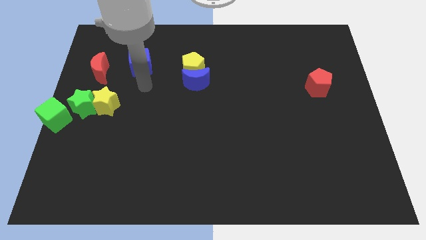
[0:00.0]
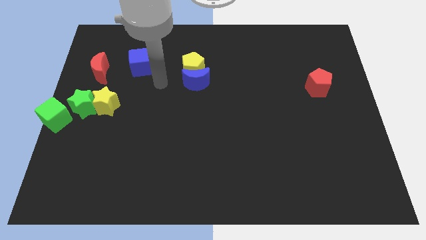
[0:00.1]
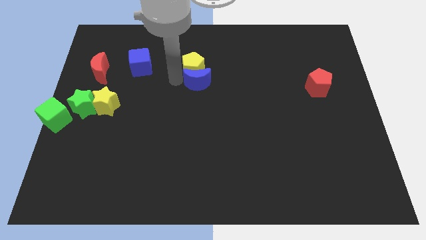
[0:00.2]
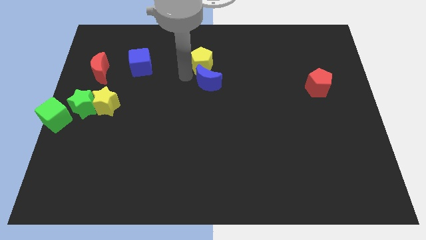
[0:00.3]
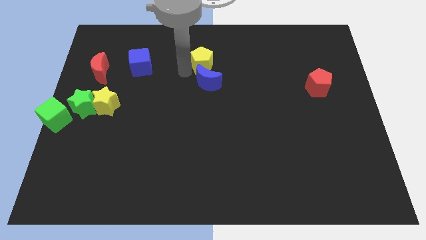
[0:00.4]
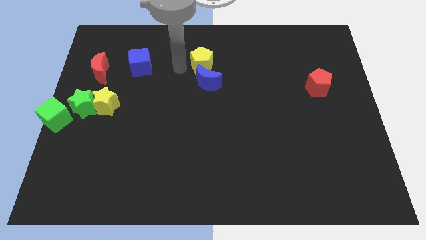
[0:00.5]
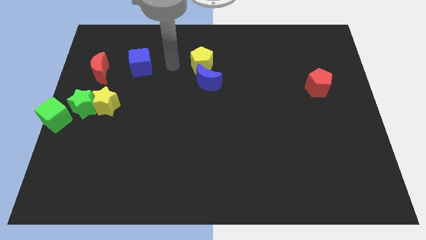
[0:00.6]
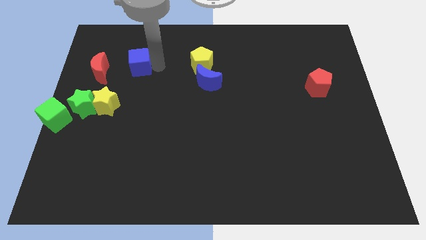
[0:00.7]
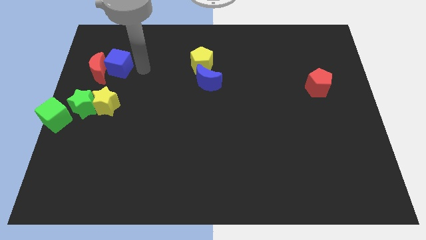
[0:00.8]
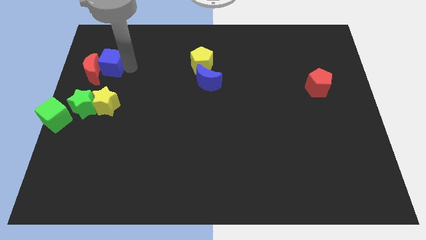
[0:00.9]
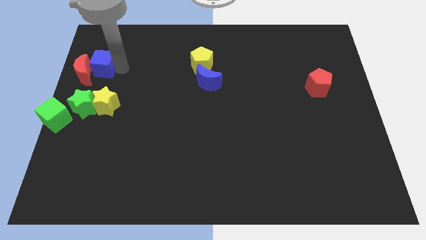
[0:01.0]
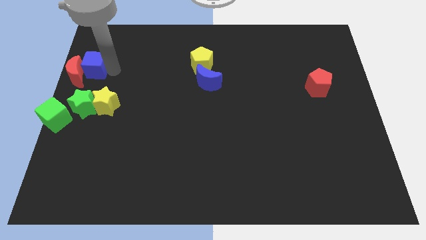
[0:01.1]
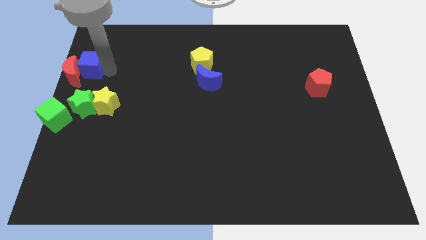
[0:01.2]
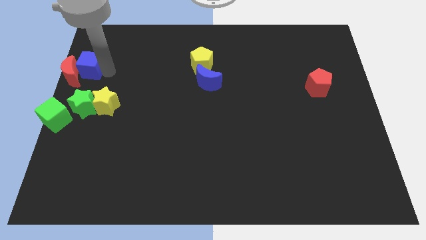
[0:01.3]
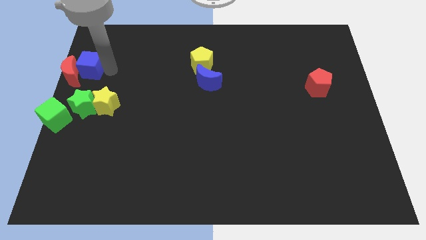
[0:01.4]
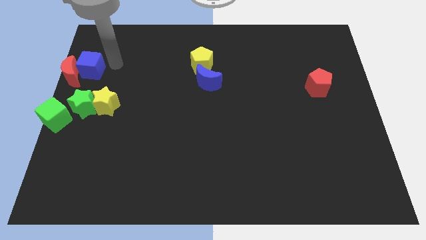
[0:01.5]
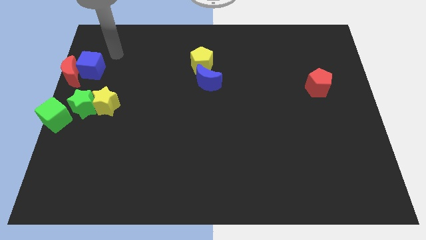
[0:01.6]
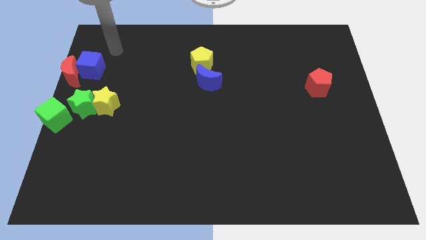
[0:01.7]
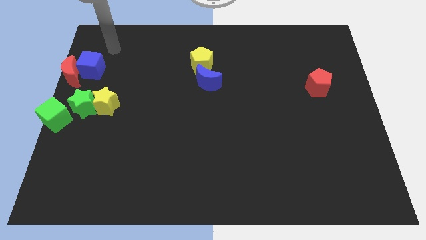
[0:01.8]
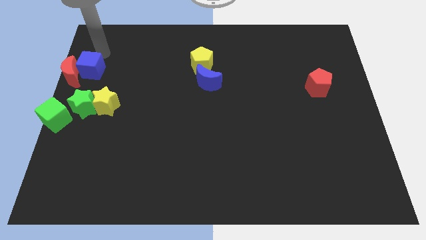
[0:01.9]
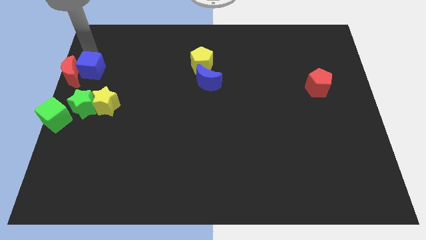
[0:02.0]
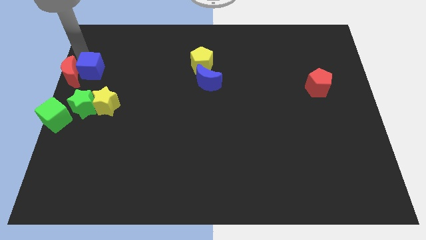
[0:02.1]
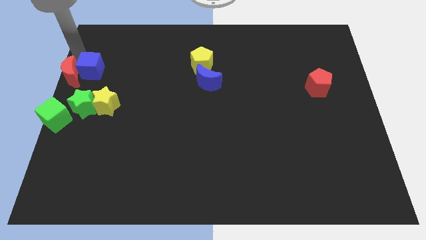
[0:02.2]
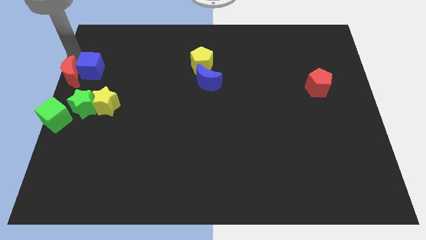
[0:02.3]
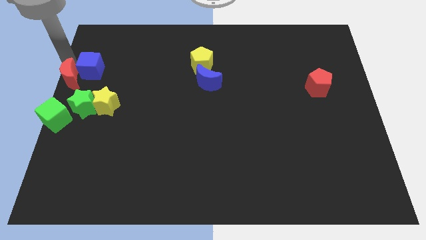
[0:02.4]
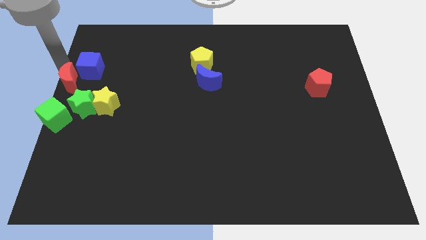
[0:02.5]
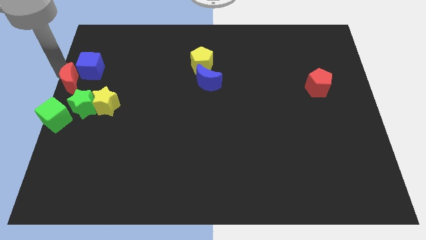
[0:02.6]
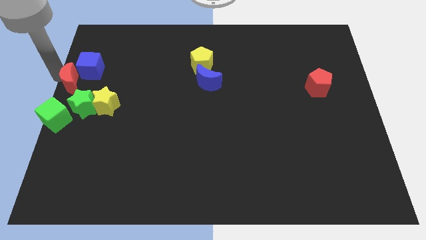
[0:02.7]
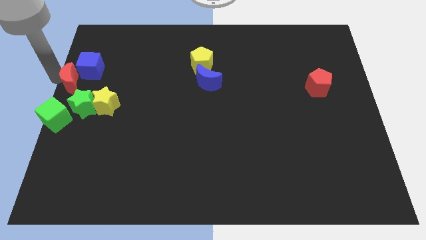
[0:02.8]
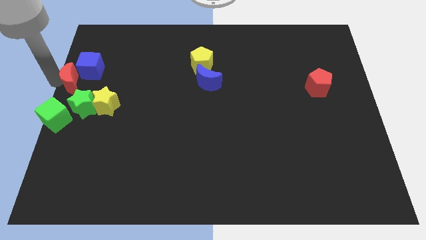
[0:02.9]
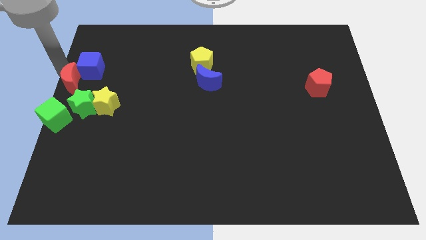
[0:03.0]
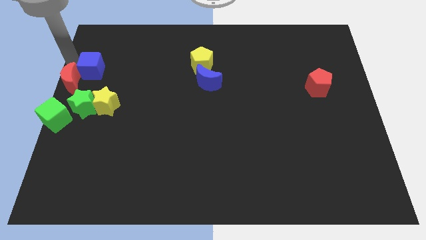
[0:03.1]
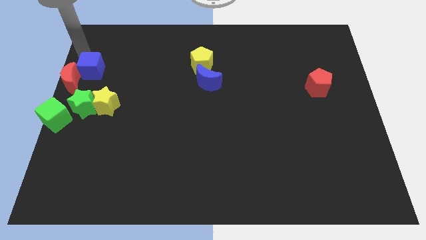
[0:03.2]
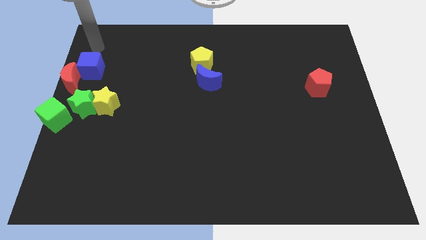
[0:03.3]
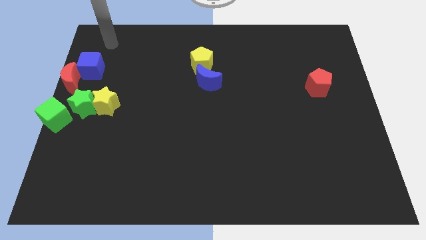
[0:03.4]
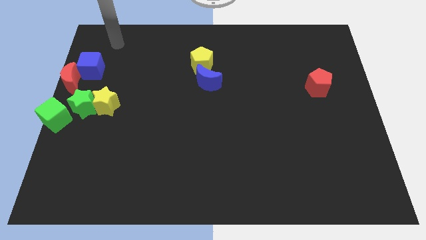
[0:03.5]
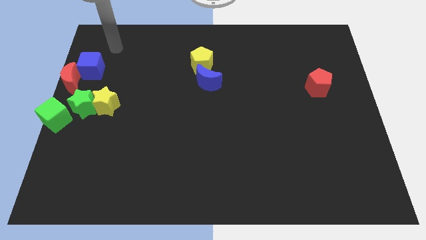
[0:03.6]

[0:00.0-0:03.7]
push the blue cube into the red crescent to the top of green star

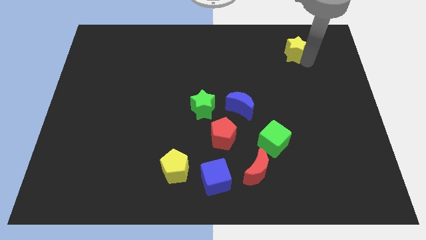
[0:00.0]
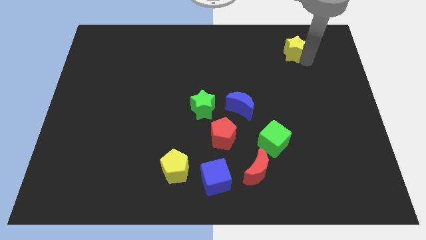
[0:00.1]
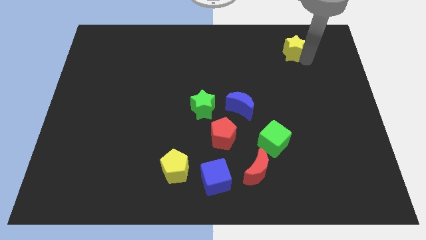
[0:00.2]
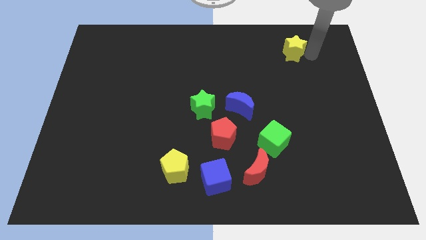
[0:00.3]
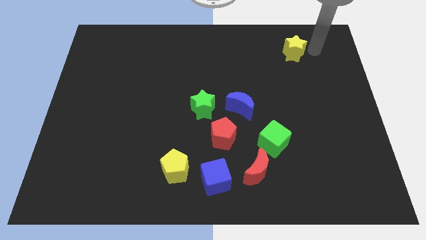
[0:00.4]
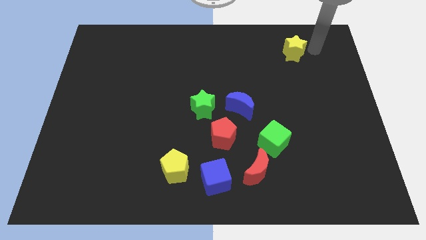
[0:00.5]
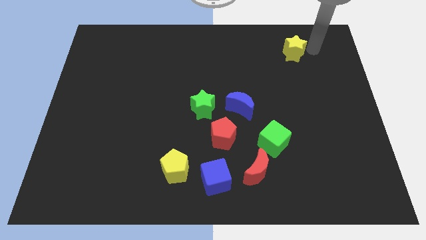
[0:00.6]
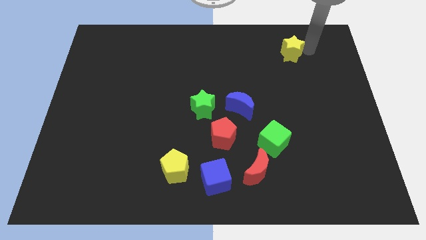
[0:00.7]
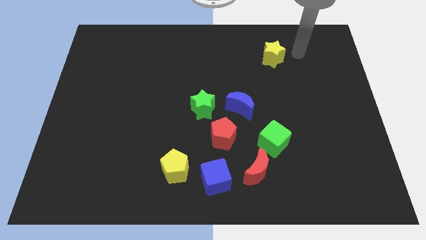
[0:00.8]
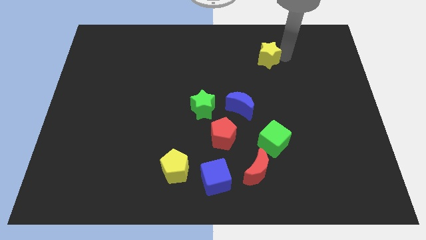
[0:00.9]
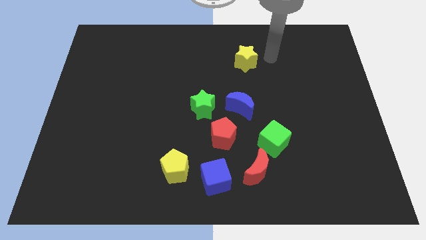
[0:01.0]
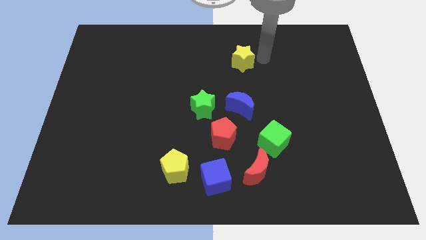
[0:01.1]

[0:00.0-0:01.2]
put the yellow star above the blue crescent

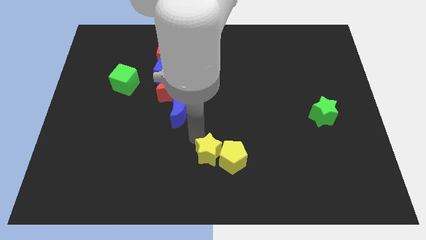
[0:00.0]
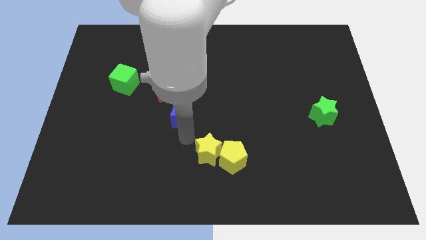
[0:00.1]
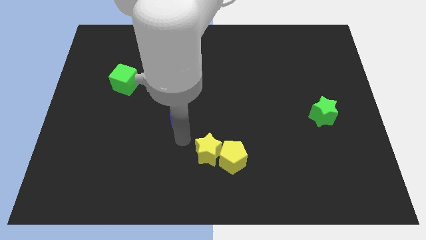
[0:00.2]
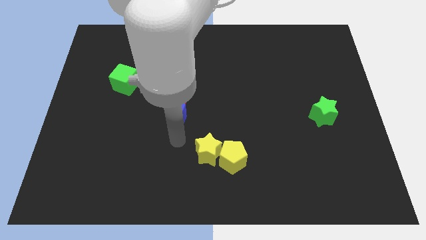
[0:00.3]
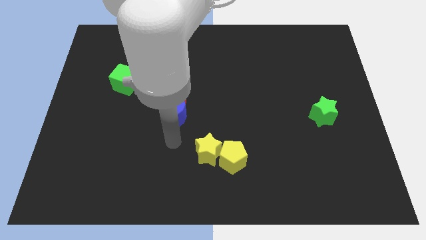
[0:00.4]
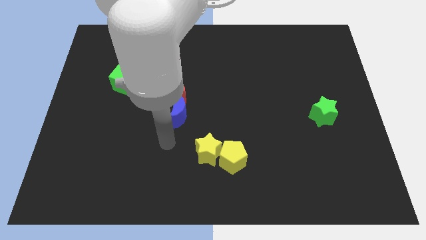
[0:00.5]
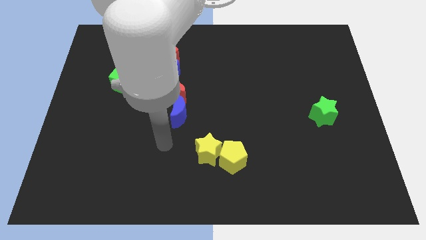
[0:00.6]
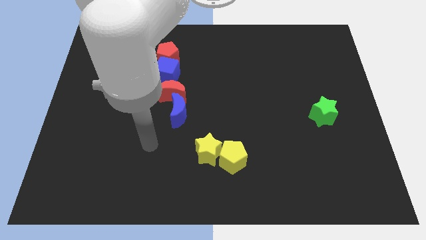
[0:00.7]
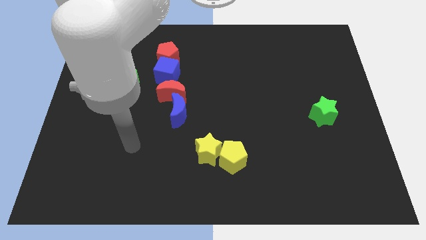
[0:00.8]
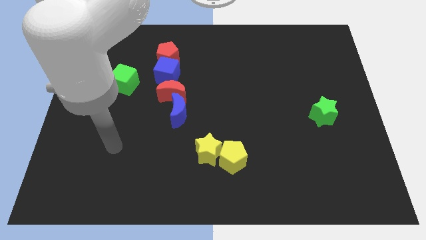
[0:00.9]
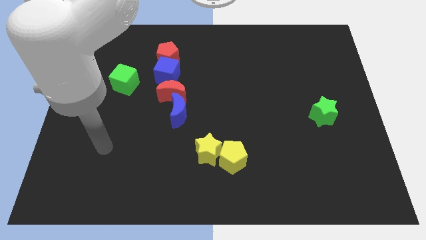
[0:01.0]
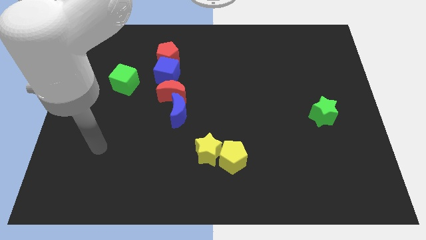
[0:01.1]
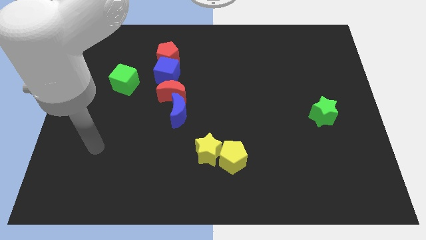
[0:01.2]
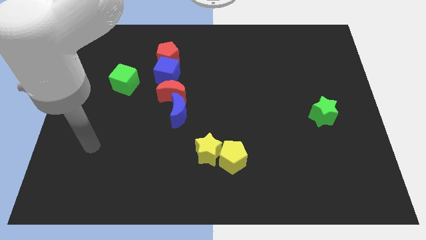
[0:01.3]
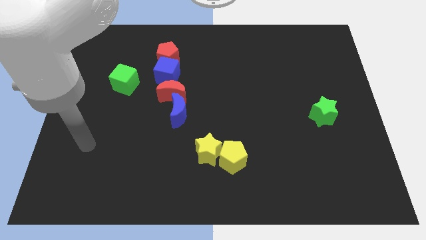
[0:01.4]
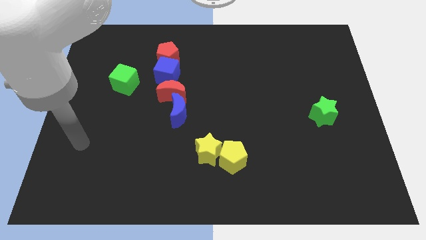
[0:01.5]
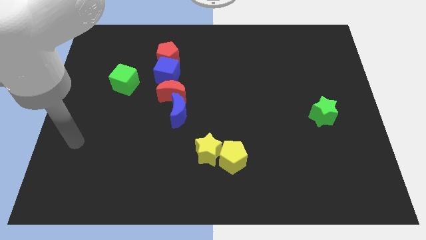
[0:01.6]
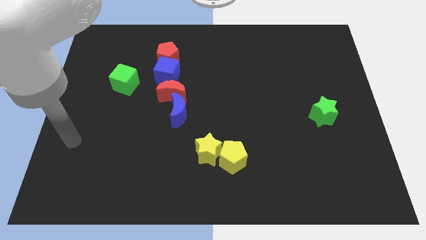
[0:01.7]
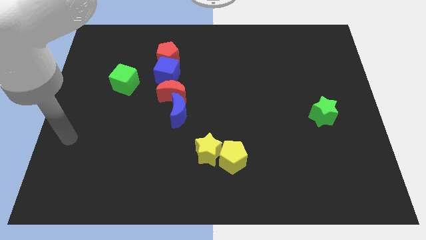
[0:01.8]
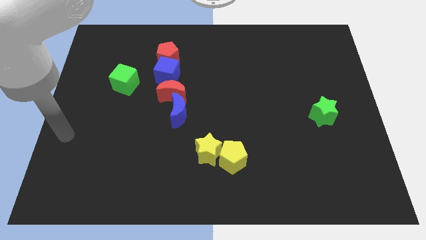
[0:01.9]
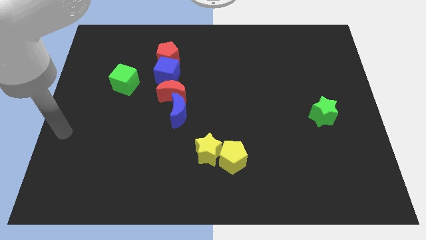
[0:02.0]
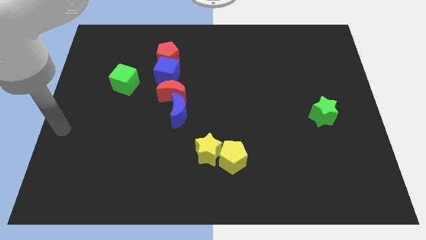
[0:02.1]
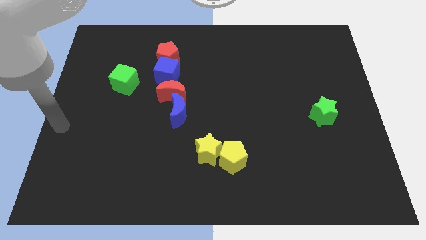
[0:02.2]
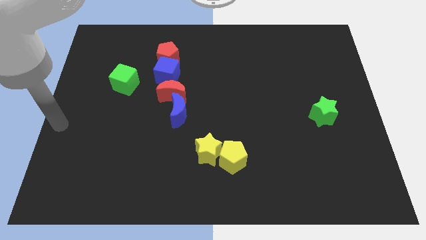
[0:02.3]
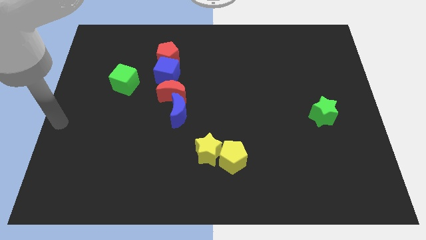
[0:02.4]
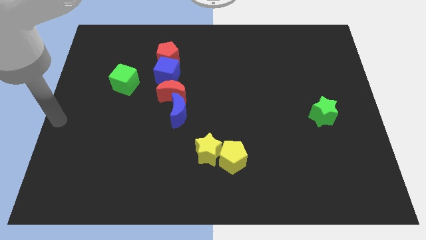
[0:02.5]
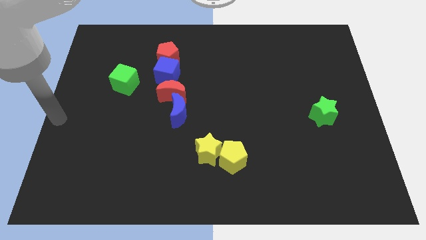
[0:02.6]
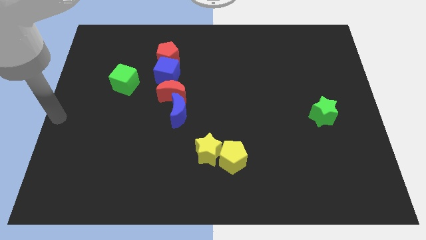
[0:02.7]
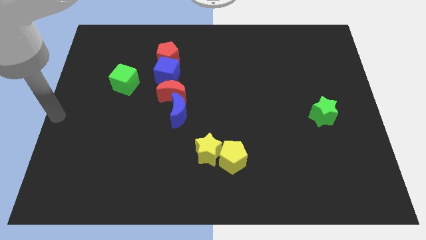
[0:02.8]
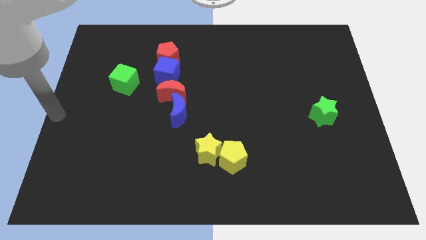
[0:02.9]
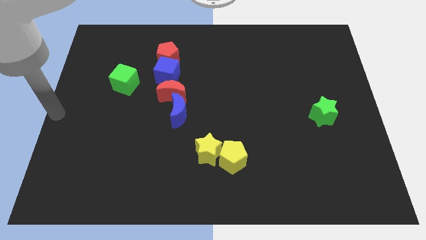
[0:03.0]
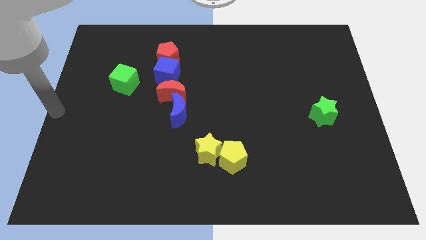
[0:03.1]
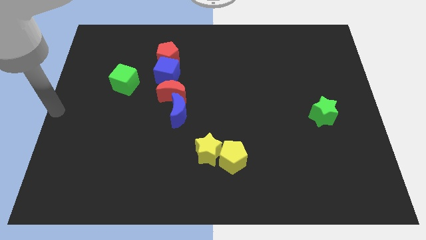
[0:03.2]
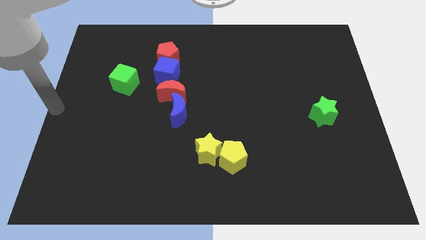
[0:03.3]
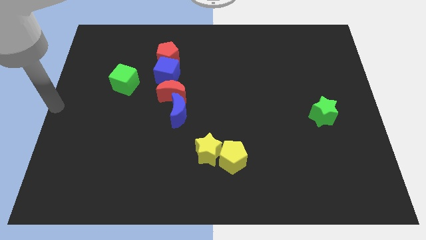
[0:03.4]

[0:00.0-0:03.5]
move your arm to the center left of the table

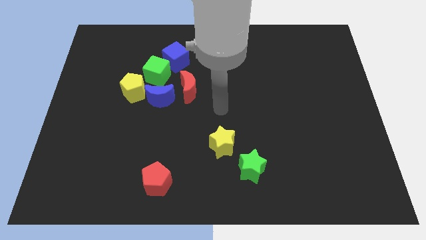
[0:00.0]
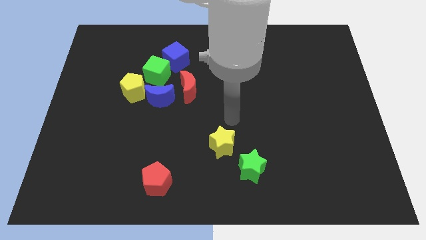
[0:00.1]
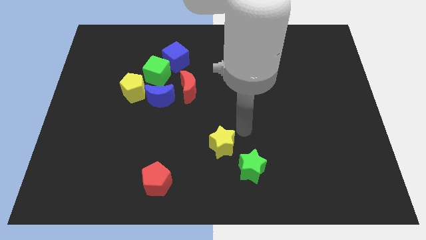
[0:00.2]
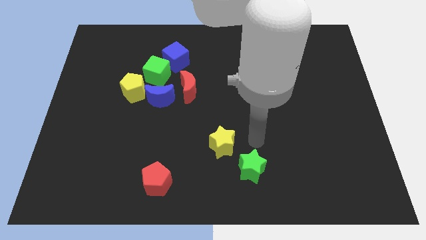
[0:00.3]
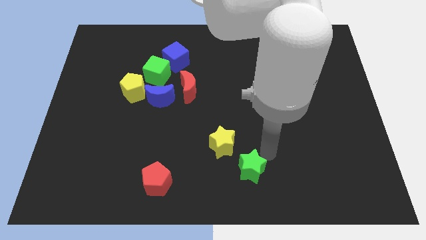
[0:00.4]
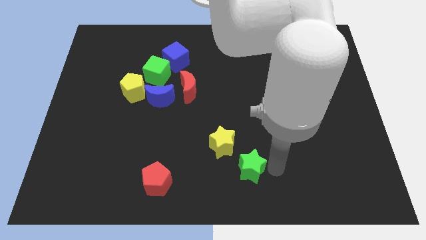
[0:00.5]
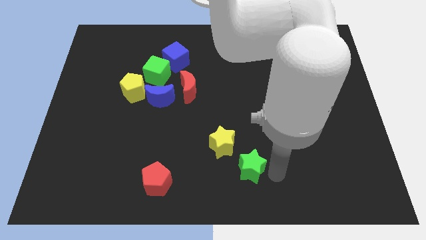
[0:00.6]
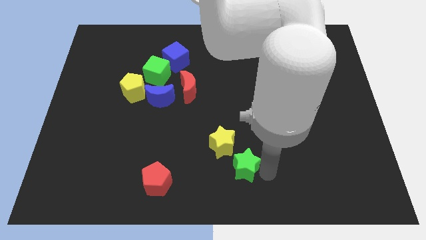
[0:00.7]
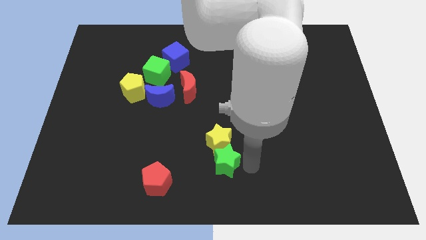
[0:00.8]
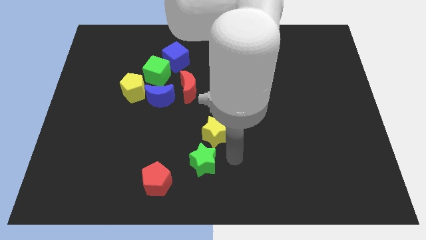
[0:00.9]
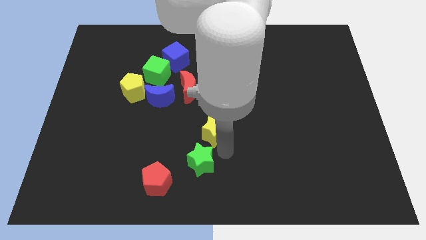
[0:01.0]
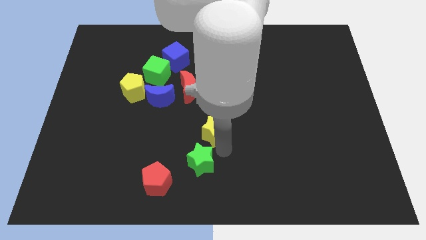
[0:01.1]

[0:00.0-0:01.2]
push the green star into the yellow star
